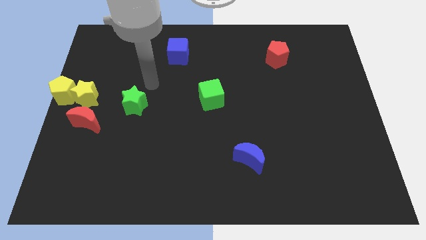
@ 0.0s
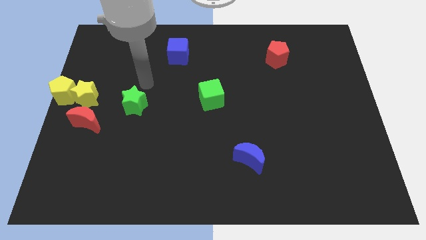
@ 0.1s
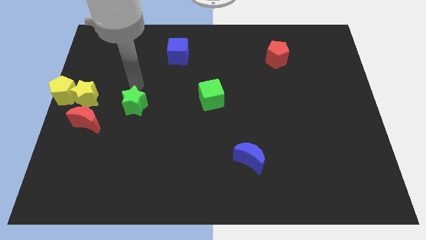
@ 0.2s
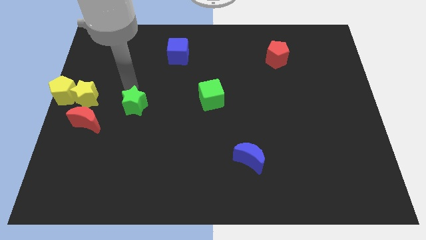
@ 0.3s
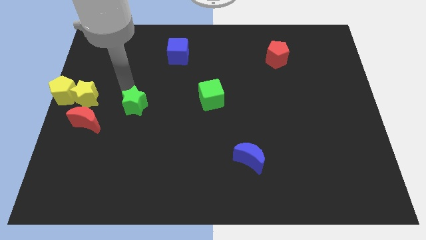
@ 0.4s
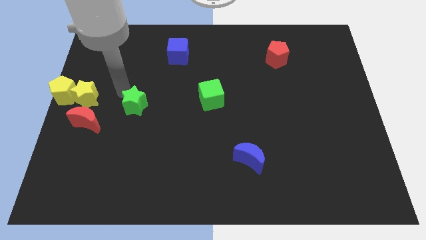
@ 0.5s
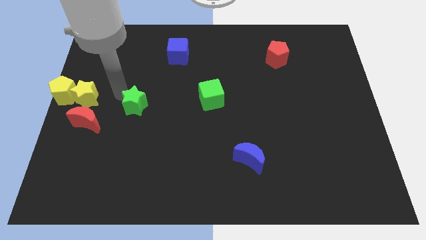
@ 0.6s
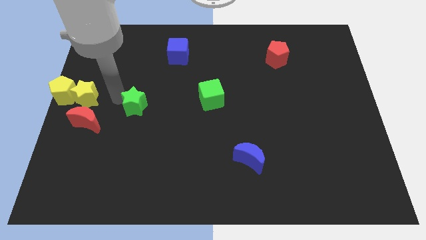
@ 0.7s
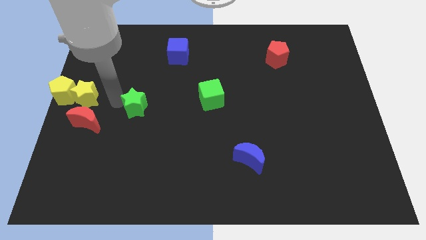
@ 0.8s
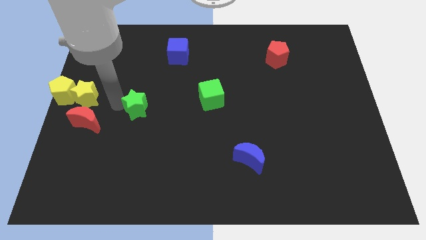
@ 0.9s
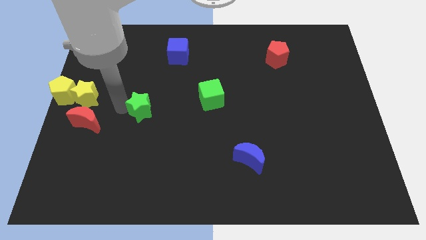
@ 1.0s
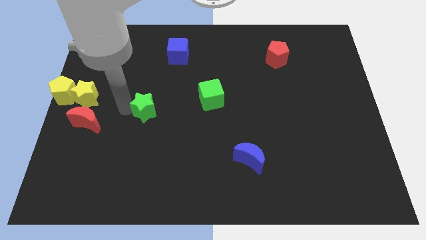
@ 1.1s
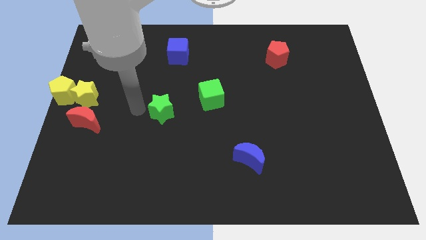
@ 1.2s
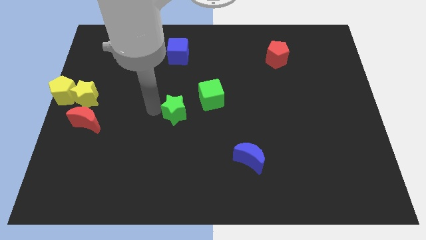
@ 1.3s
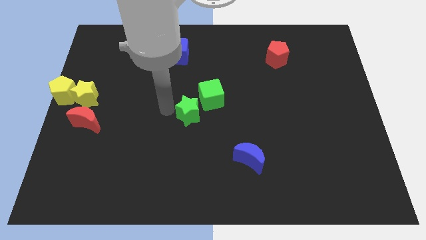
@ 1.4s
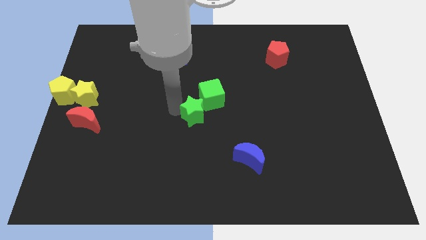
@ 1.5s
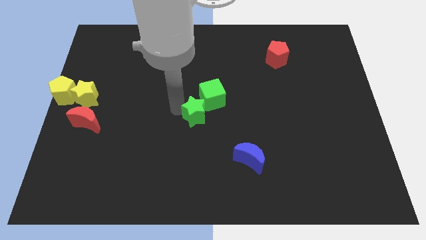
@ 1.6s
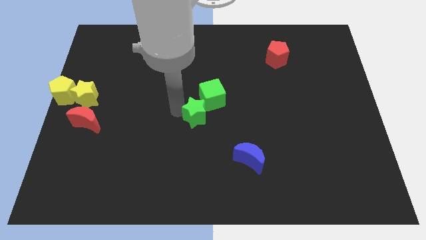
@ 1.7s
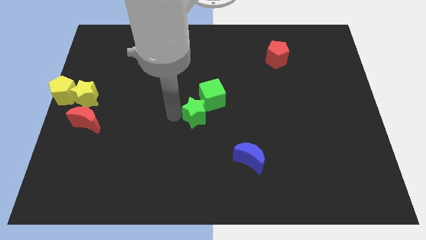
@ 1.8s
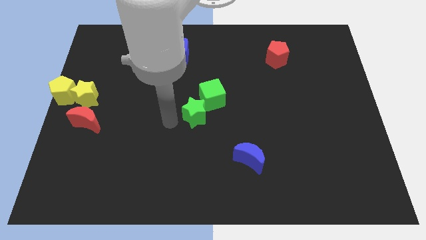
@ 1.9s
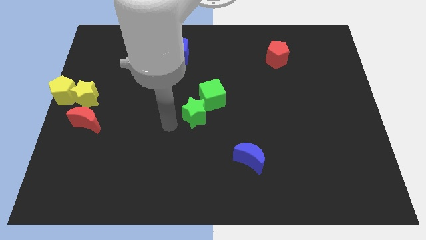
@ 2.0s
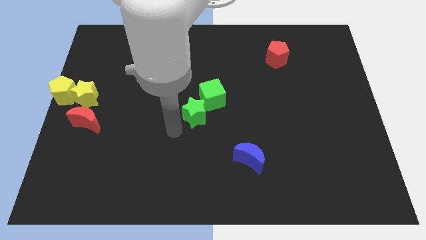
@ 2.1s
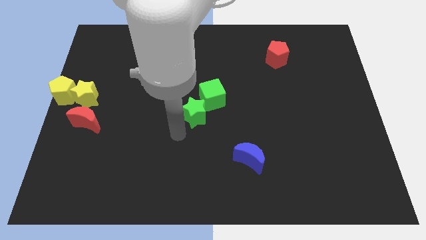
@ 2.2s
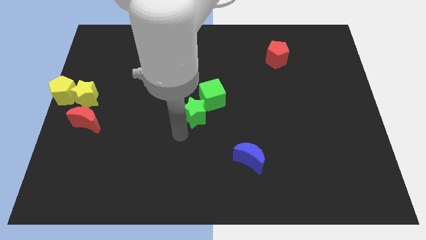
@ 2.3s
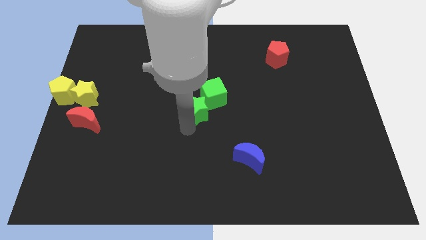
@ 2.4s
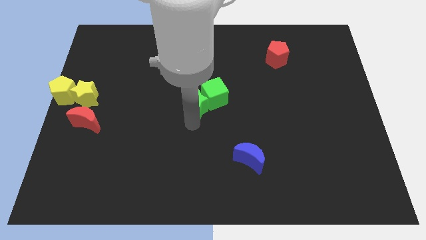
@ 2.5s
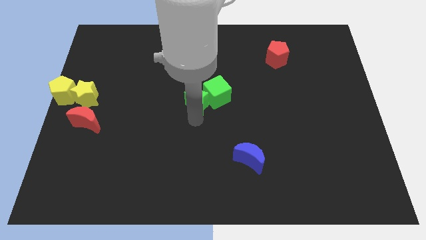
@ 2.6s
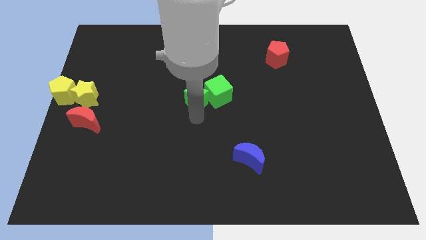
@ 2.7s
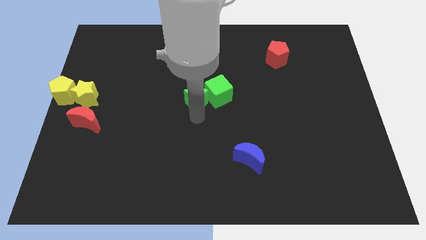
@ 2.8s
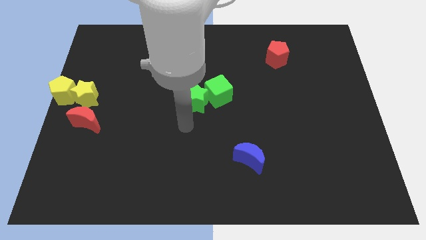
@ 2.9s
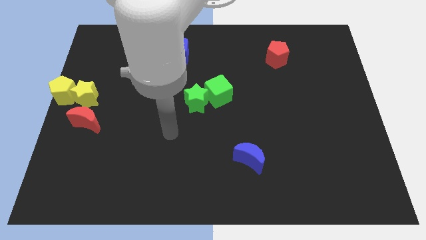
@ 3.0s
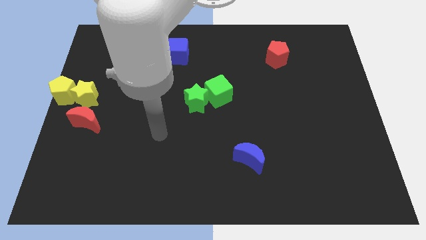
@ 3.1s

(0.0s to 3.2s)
push the green star into the green cube

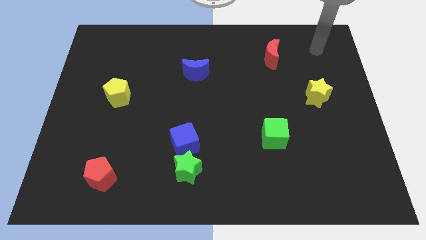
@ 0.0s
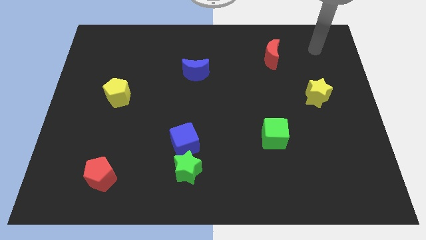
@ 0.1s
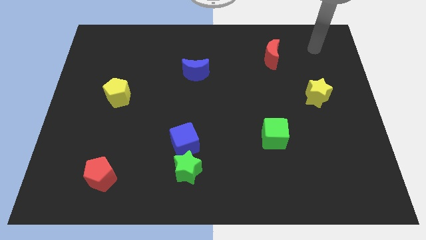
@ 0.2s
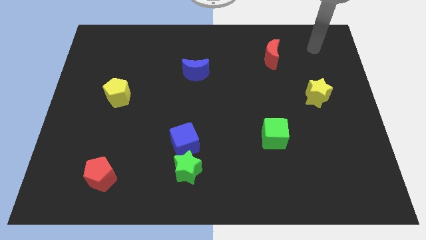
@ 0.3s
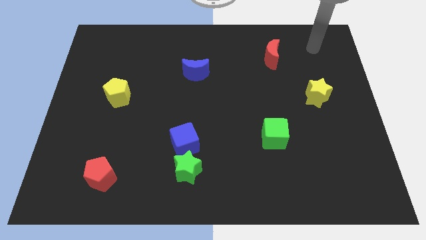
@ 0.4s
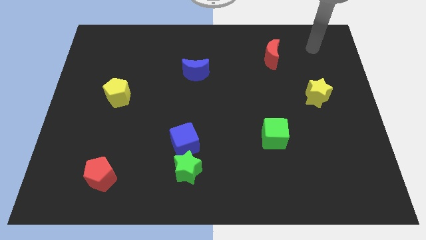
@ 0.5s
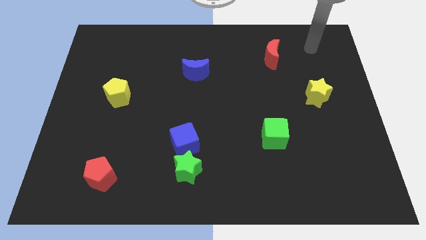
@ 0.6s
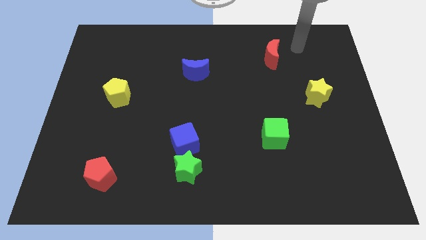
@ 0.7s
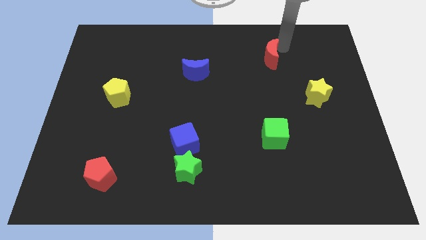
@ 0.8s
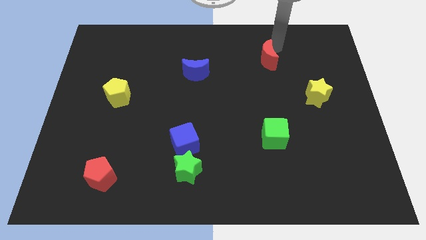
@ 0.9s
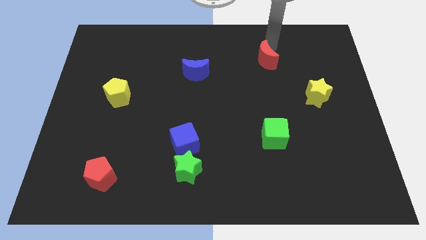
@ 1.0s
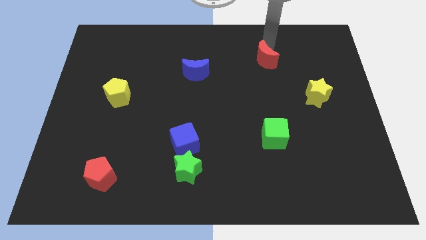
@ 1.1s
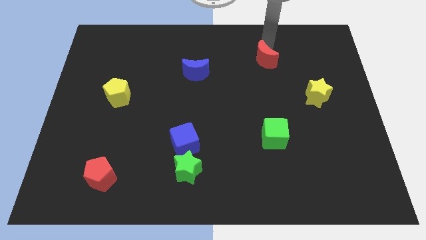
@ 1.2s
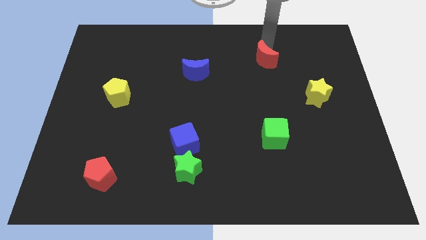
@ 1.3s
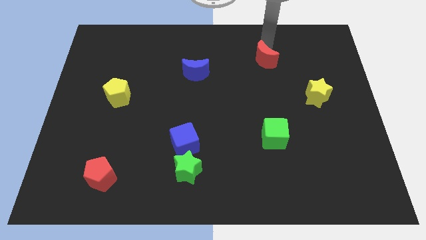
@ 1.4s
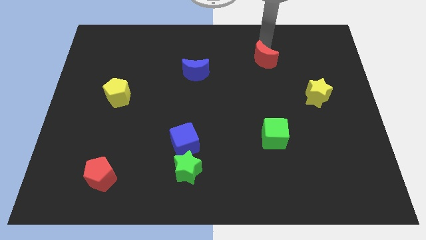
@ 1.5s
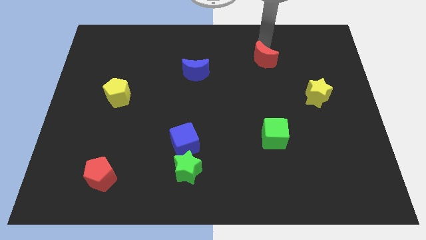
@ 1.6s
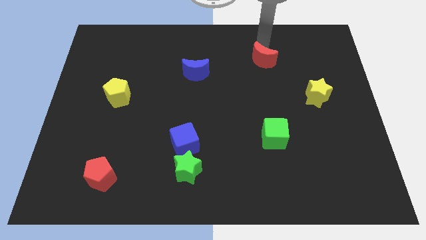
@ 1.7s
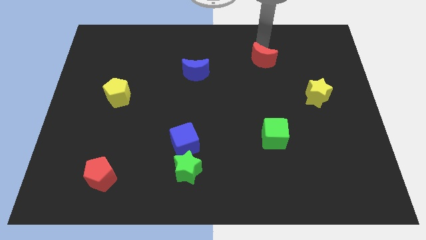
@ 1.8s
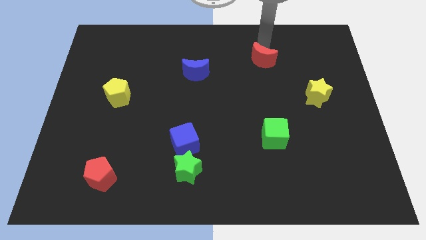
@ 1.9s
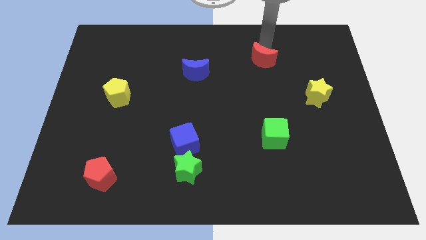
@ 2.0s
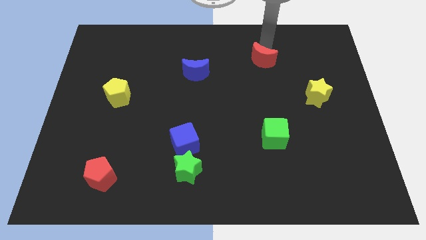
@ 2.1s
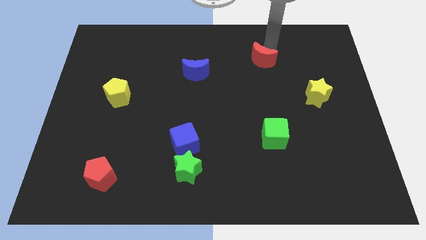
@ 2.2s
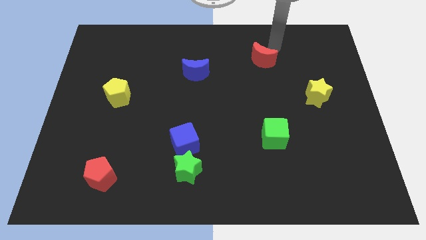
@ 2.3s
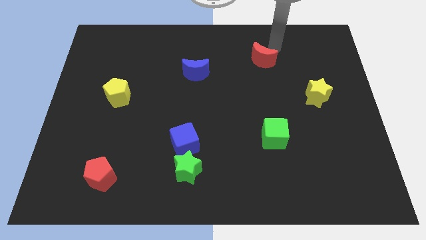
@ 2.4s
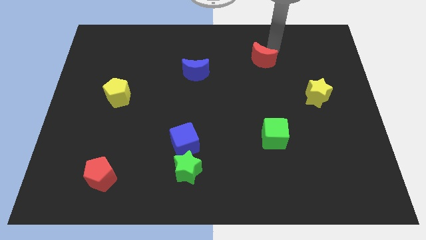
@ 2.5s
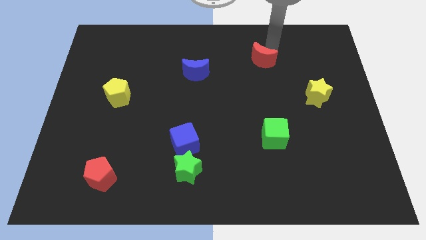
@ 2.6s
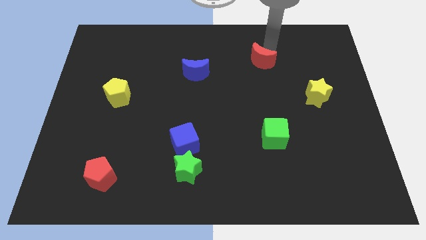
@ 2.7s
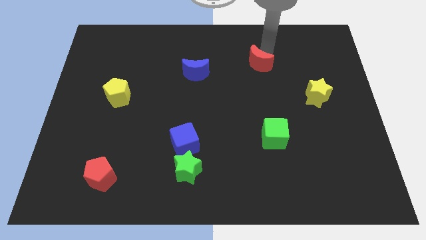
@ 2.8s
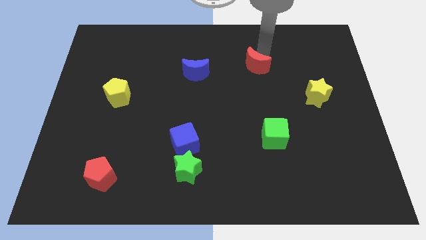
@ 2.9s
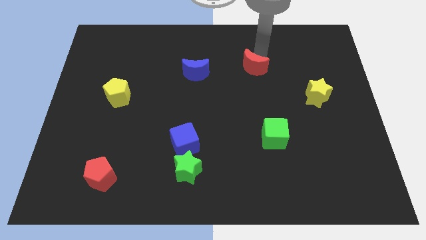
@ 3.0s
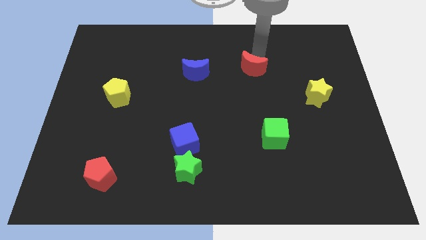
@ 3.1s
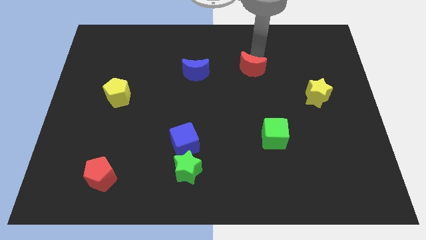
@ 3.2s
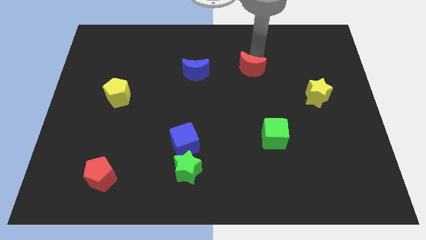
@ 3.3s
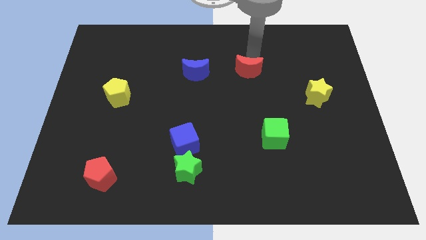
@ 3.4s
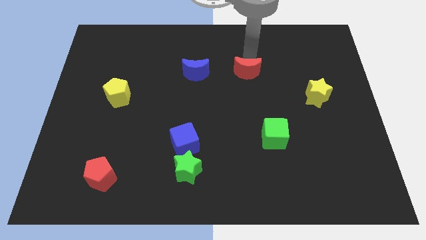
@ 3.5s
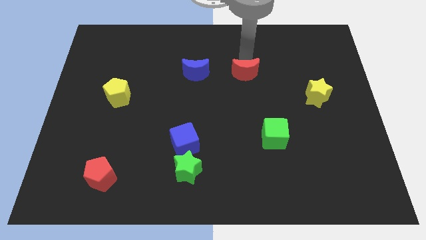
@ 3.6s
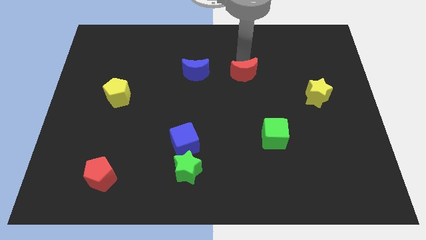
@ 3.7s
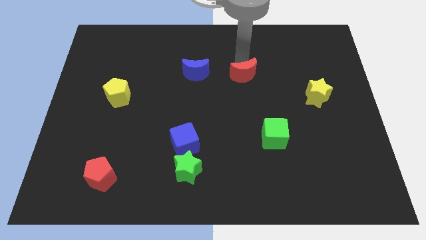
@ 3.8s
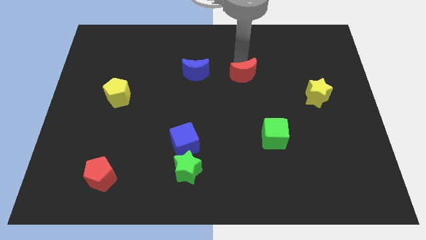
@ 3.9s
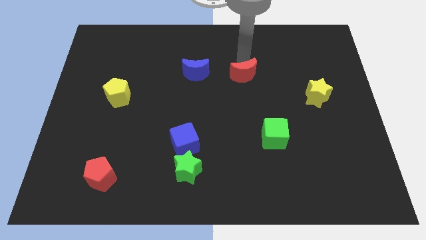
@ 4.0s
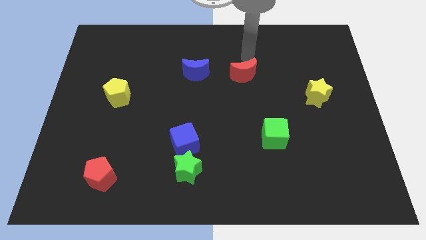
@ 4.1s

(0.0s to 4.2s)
move the red crescent horizontal to the blue crescent

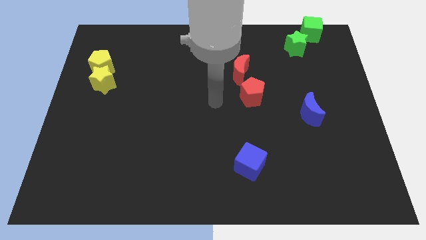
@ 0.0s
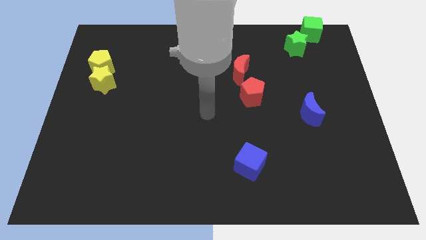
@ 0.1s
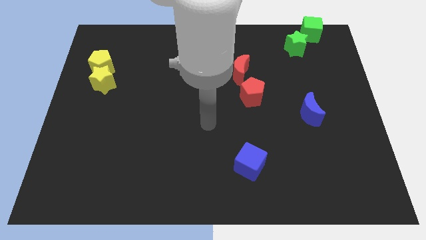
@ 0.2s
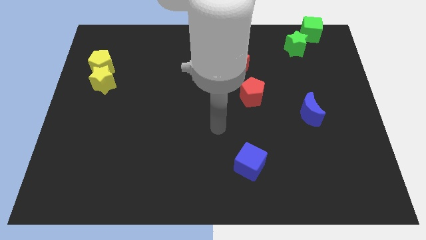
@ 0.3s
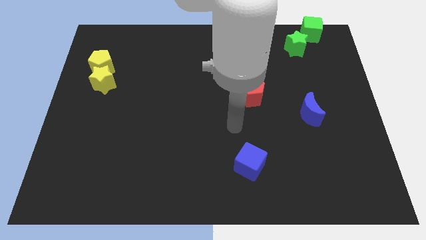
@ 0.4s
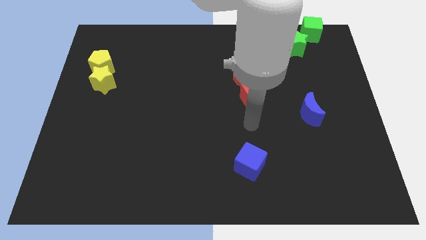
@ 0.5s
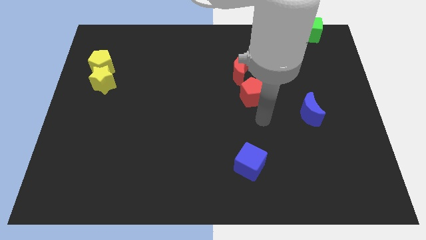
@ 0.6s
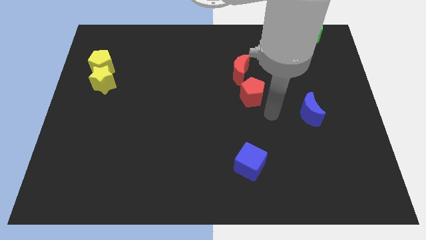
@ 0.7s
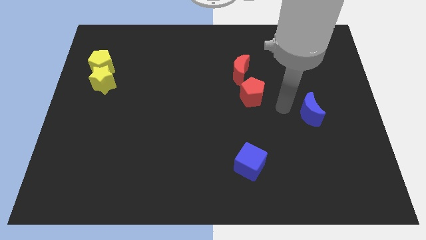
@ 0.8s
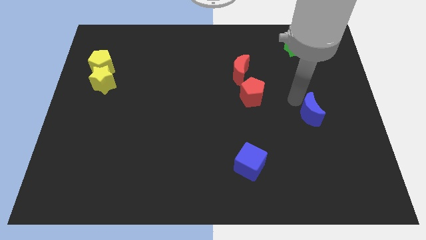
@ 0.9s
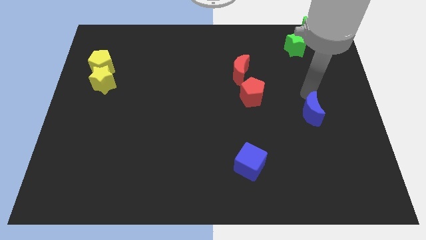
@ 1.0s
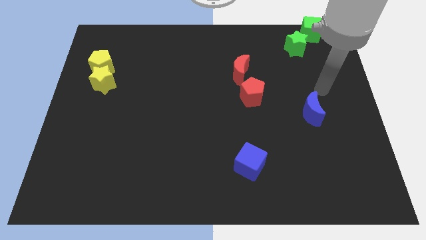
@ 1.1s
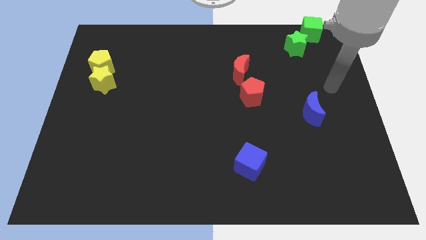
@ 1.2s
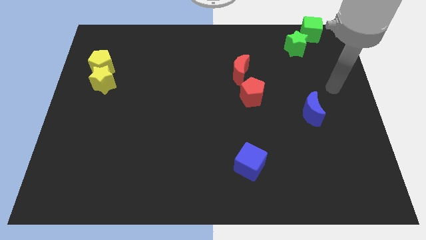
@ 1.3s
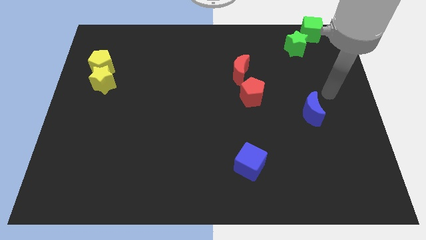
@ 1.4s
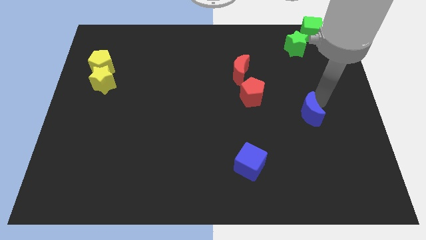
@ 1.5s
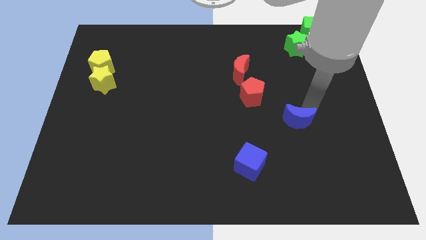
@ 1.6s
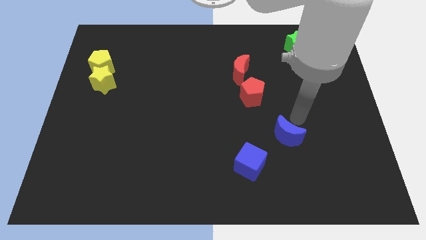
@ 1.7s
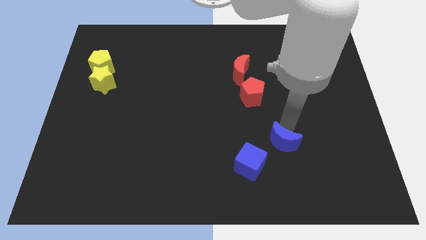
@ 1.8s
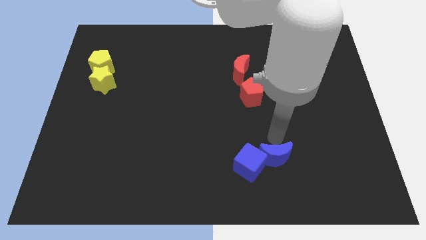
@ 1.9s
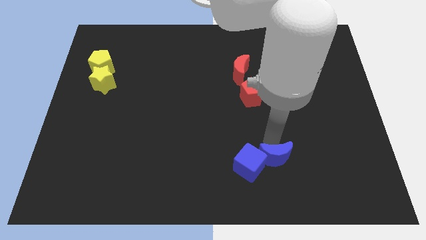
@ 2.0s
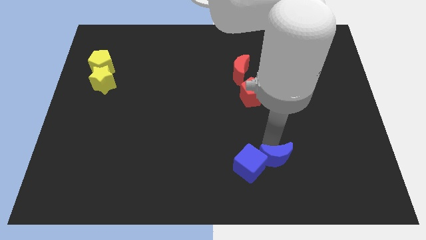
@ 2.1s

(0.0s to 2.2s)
push the blue crescent to the right of the blue cube
